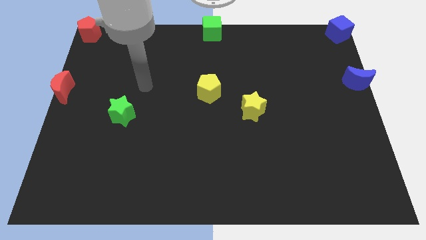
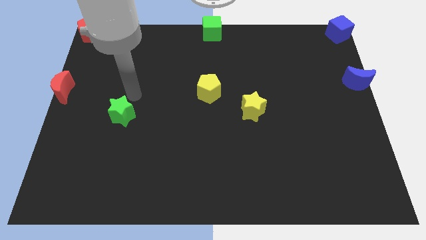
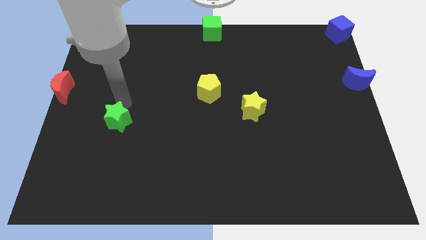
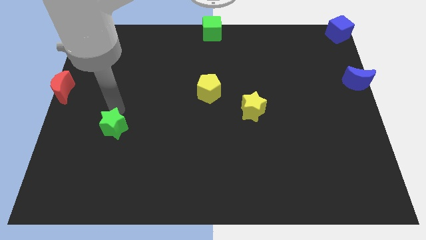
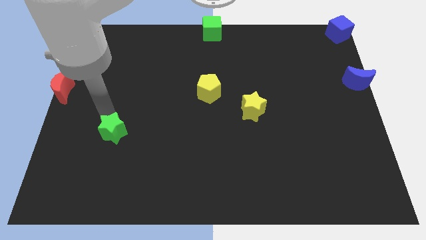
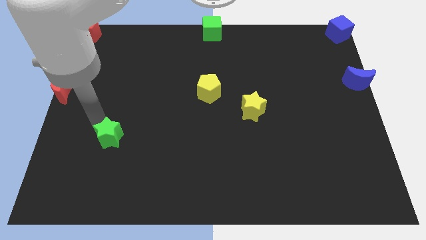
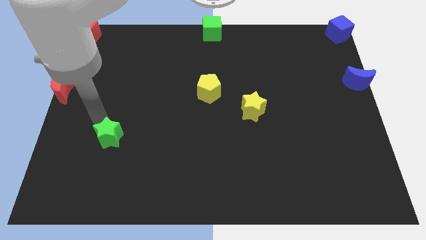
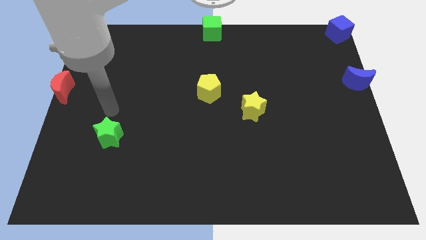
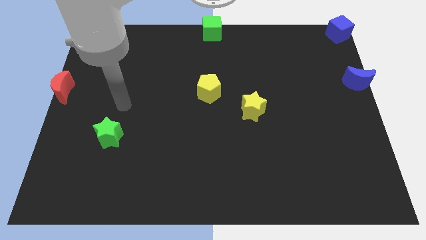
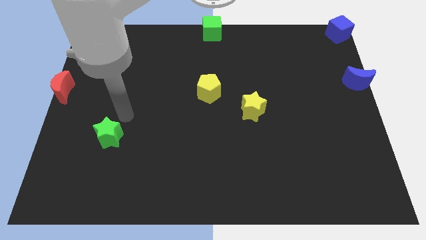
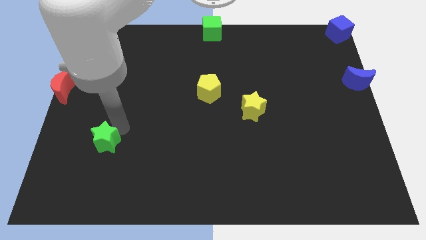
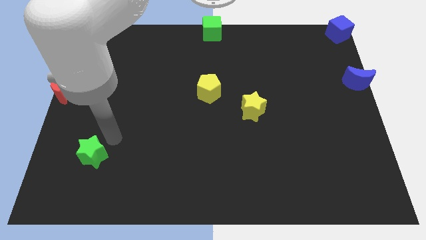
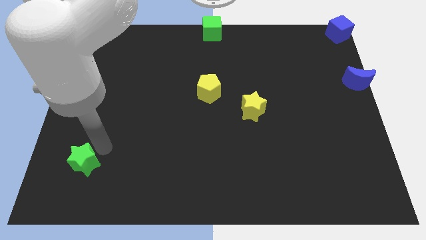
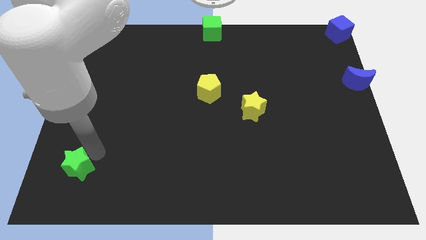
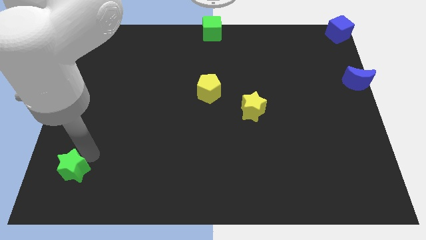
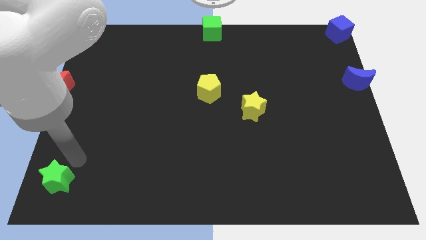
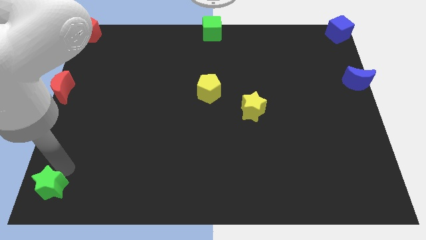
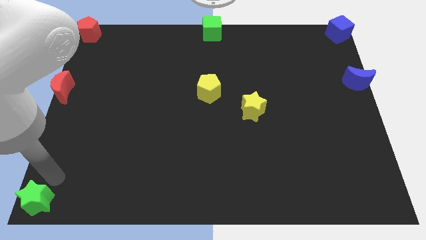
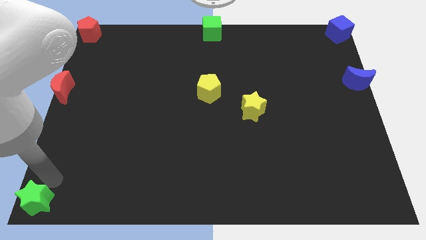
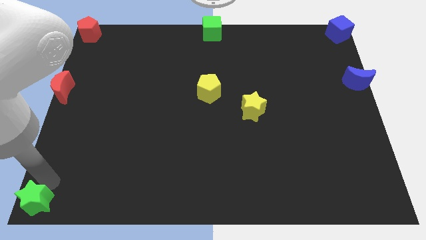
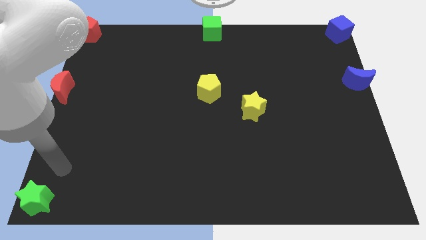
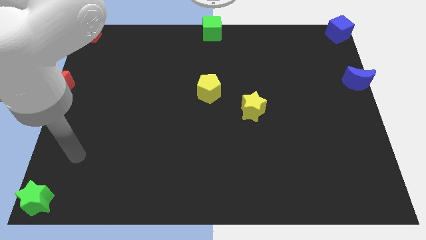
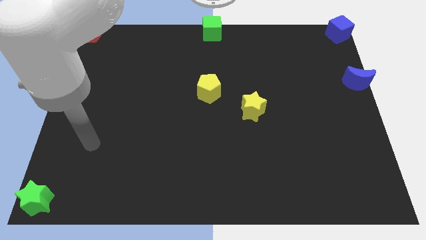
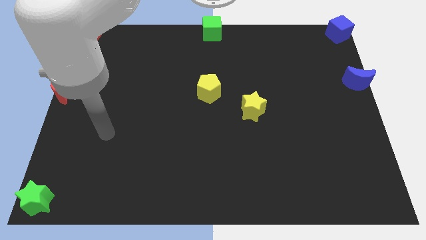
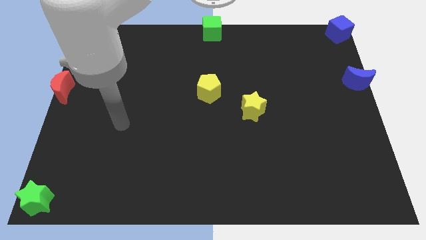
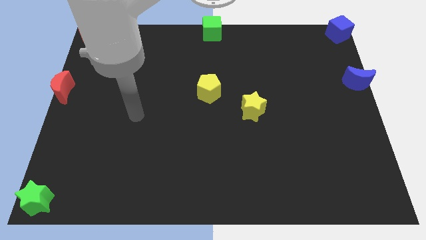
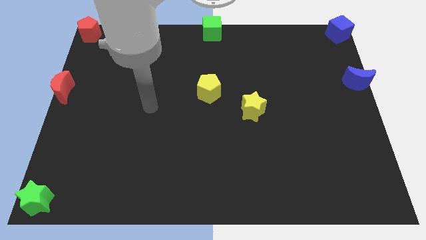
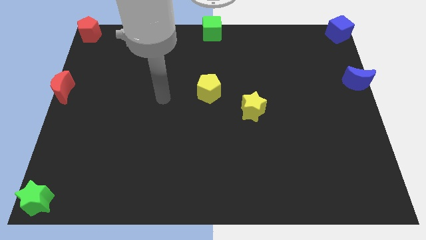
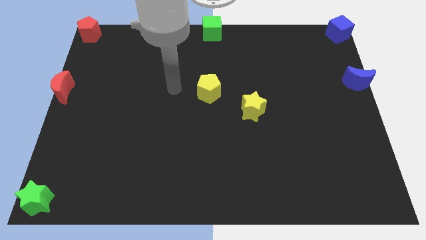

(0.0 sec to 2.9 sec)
push the green star to the bottom left corner of the board

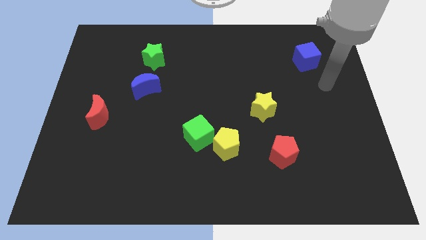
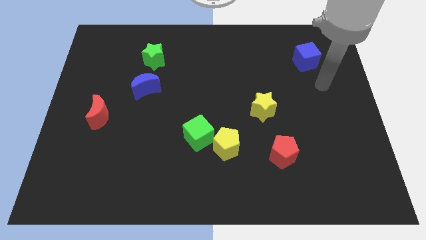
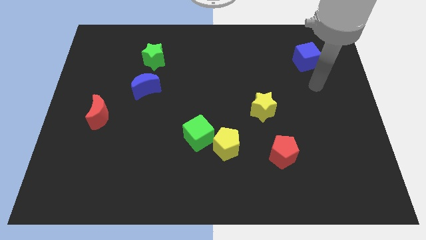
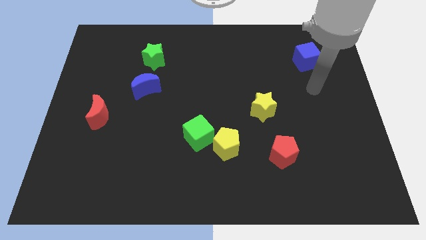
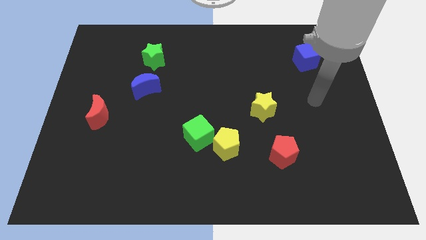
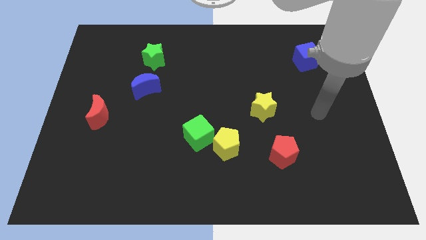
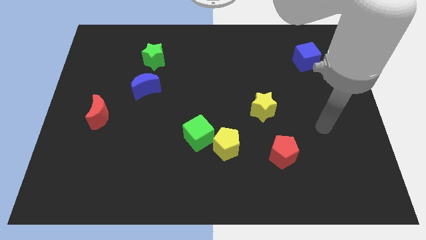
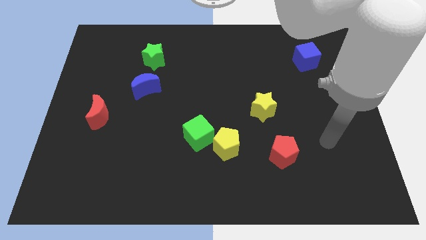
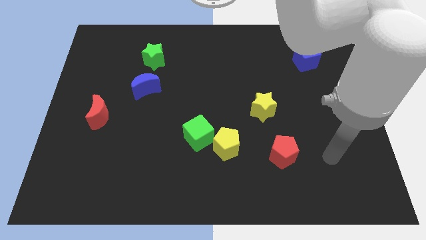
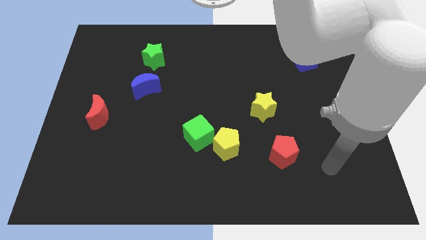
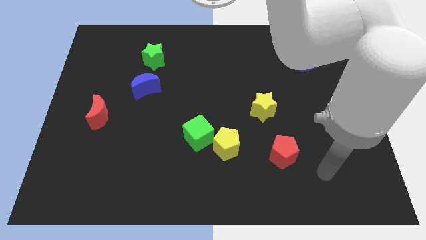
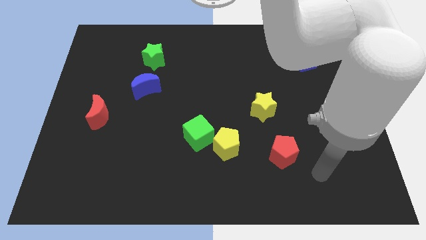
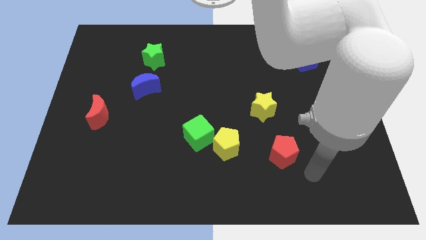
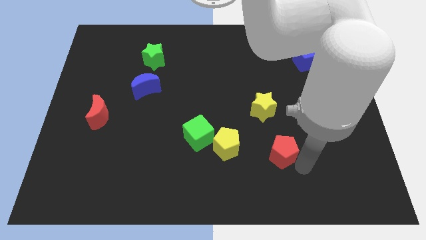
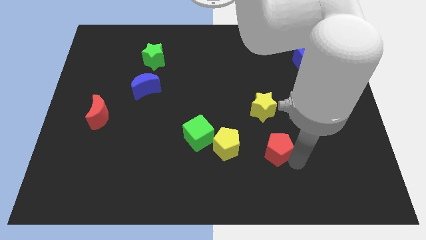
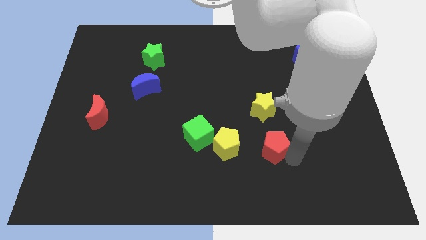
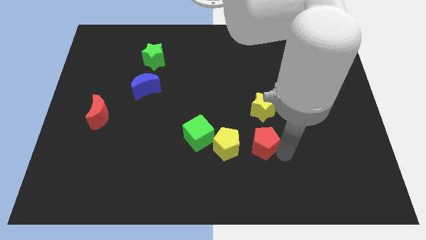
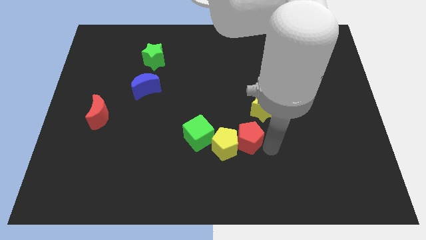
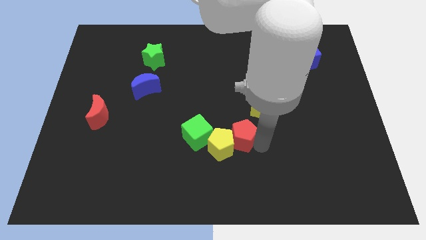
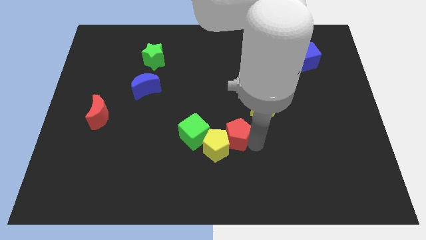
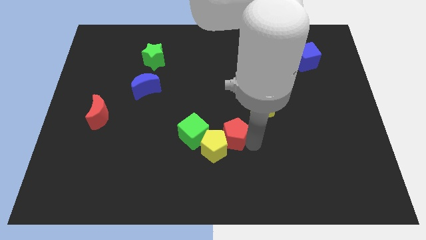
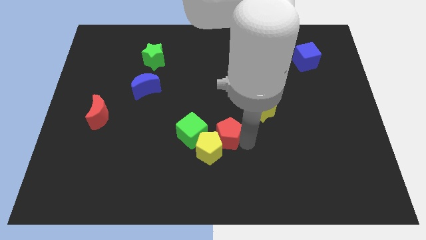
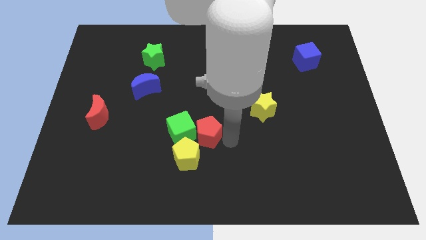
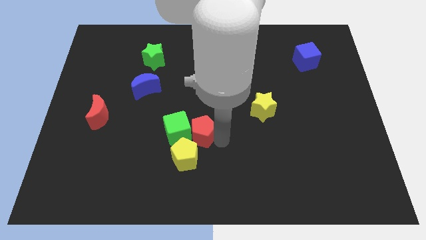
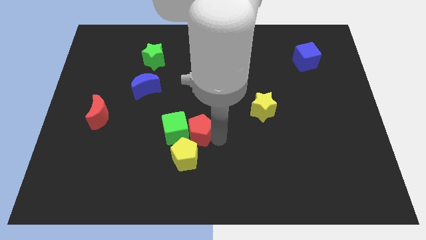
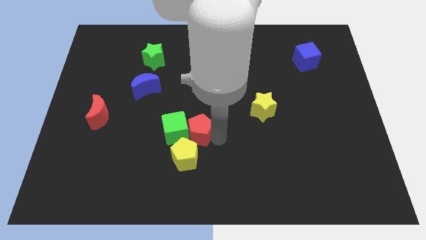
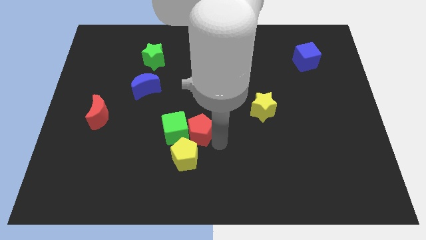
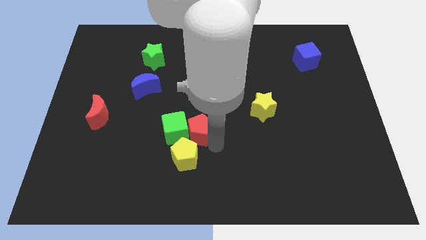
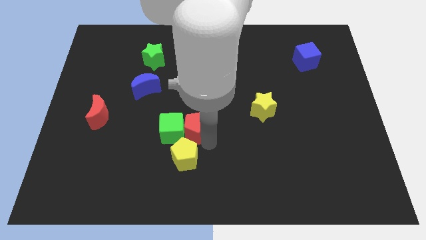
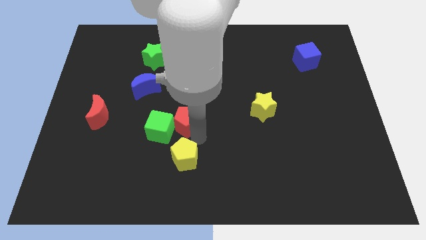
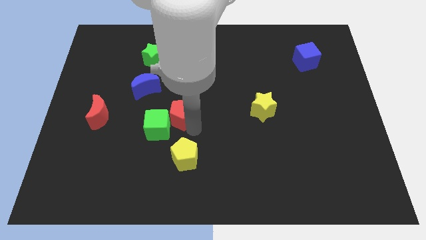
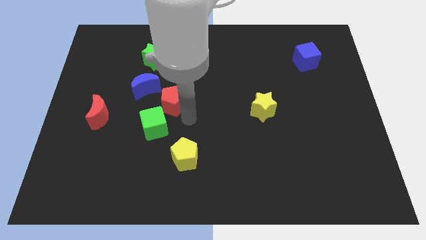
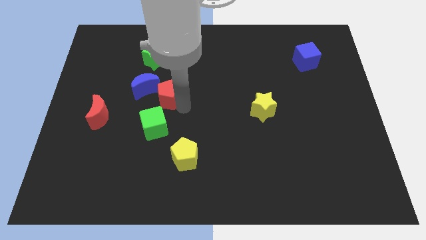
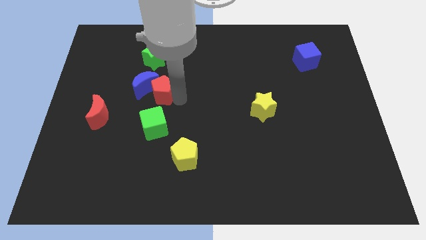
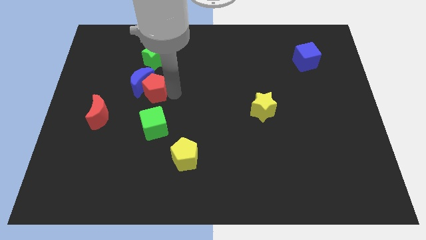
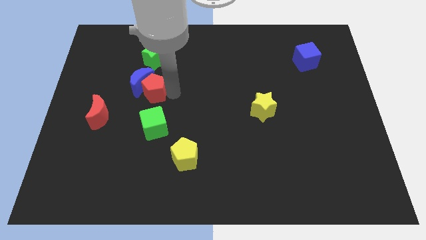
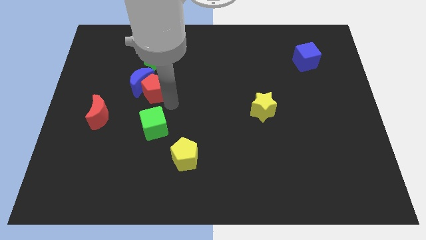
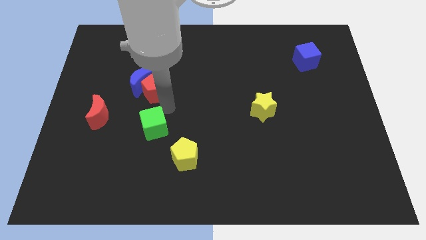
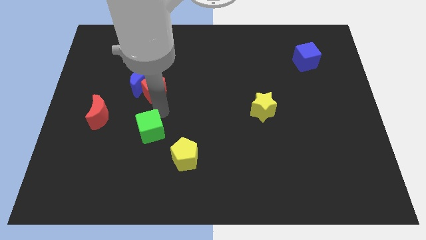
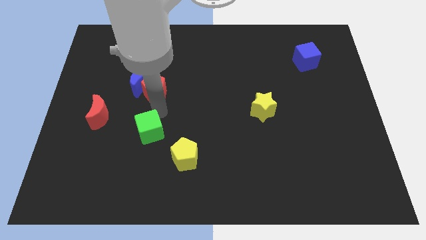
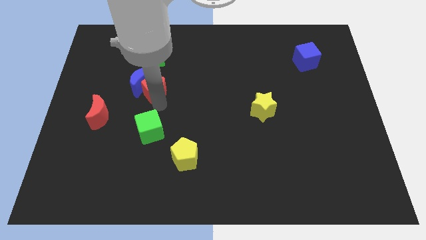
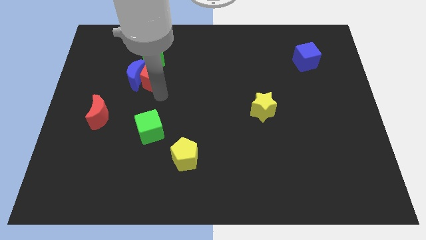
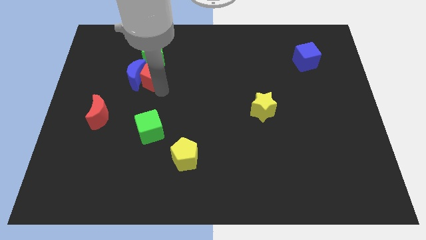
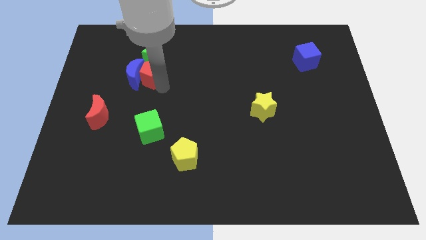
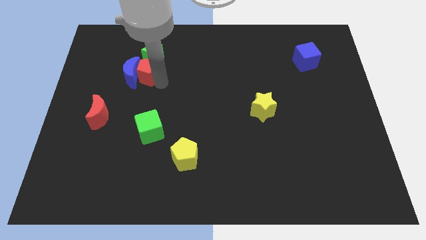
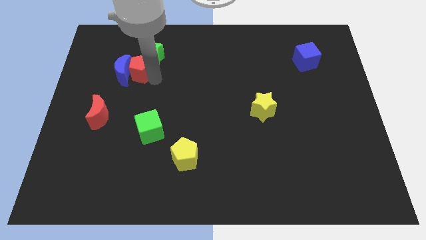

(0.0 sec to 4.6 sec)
move the red pentagon into the blue moon

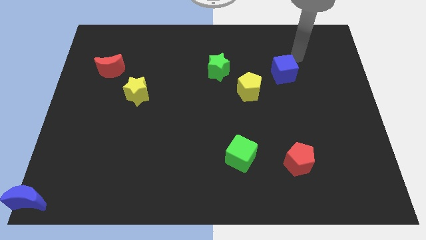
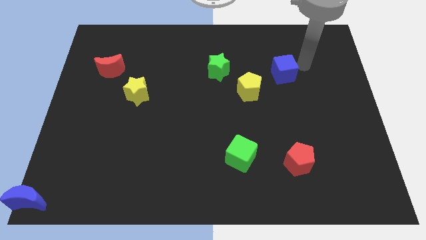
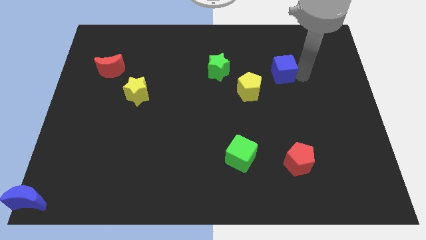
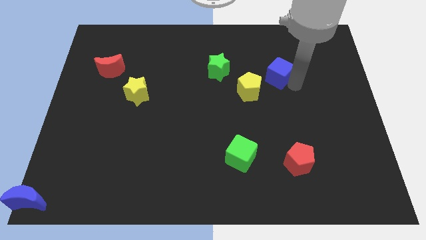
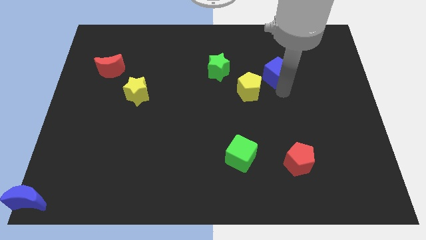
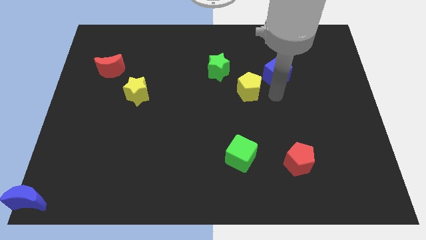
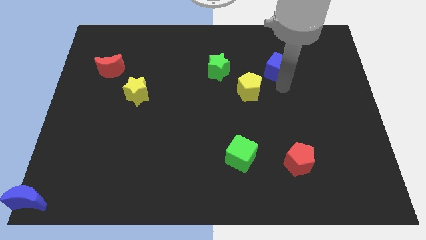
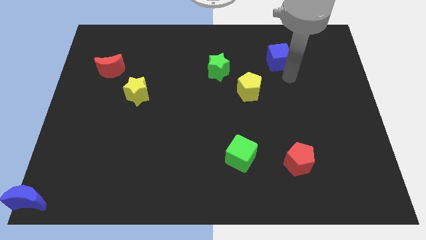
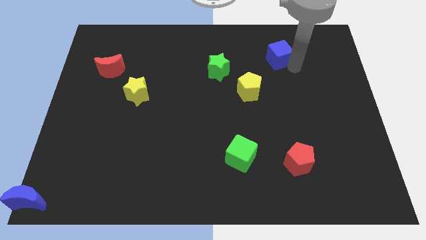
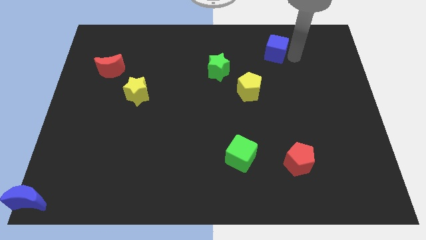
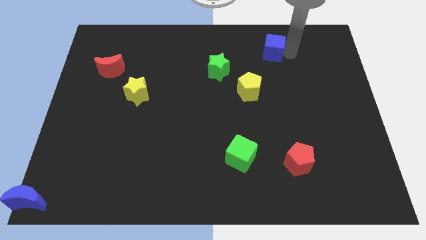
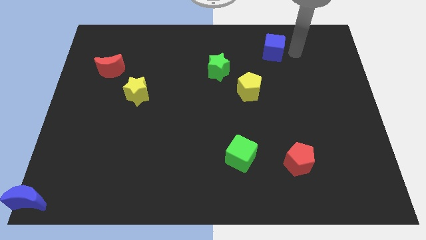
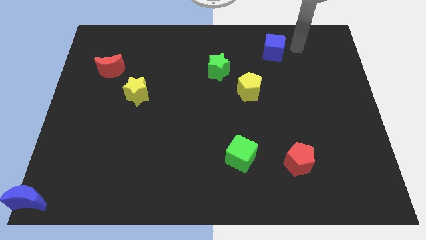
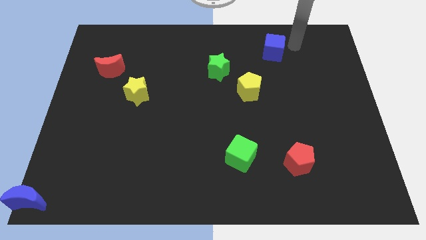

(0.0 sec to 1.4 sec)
move the blue cube diagonal to the green star
